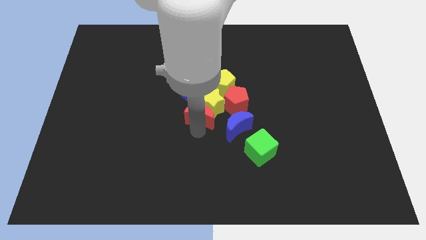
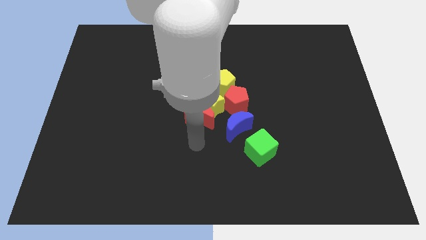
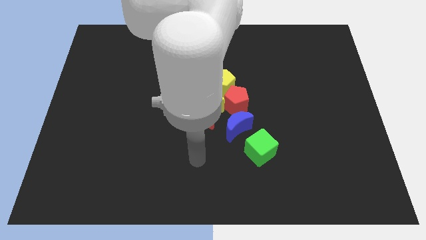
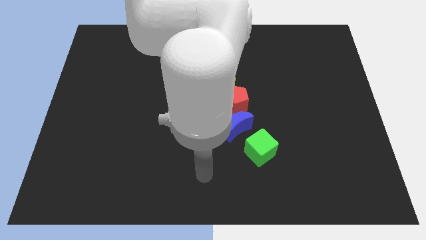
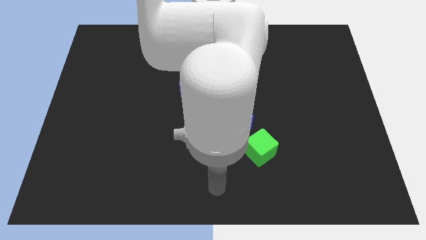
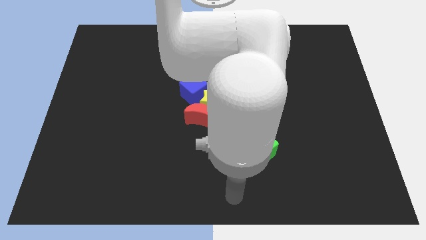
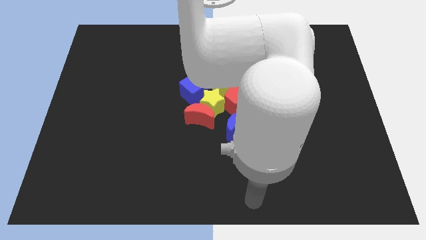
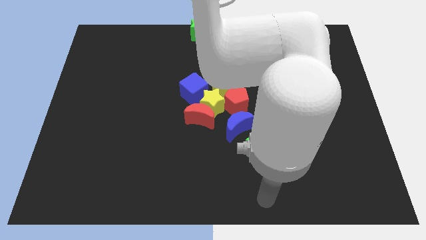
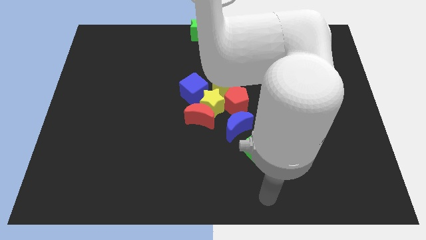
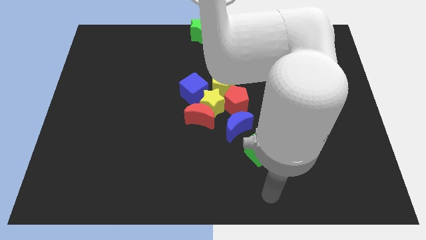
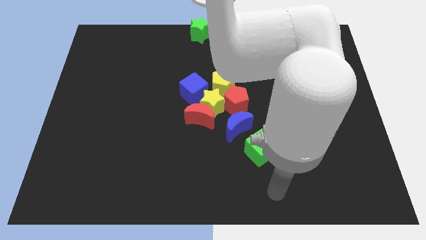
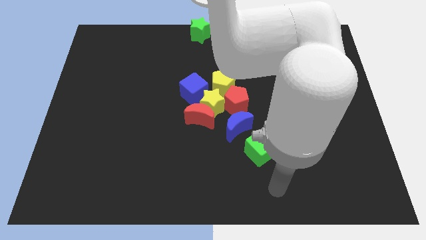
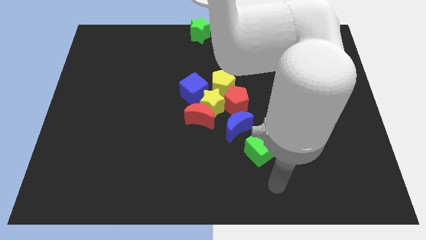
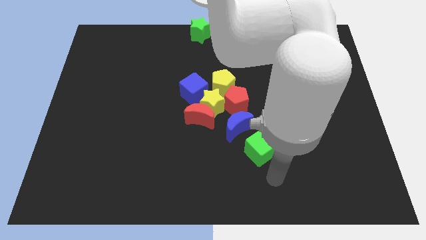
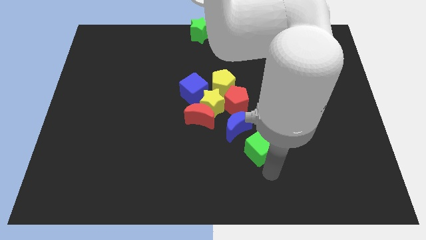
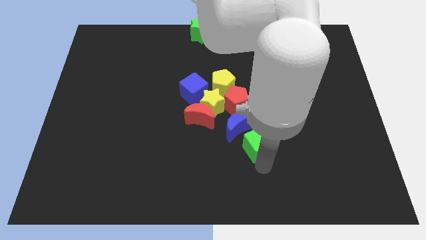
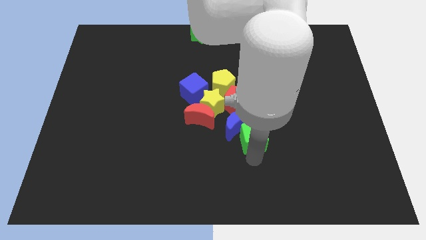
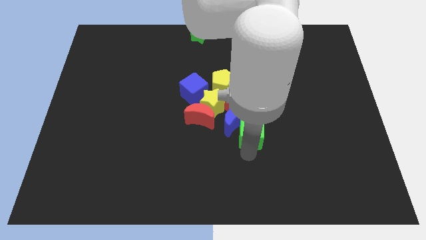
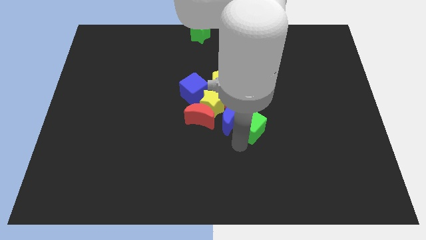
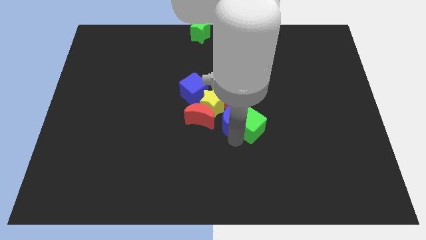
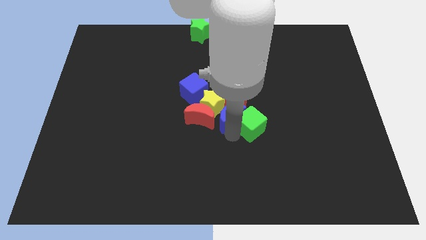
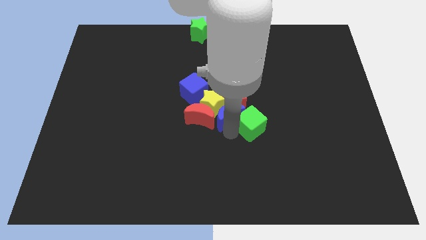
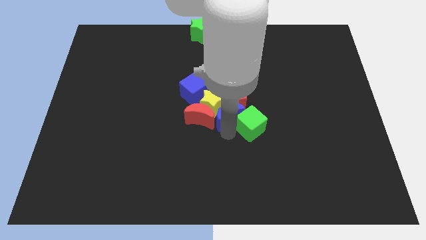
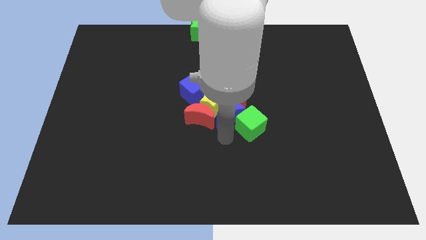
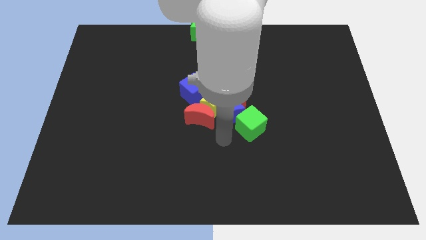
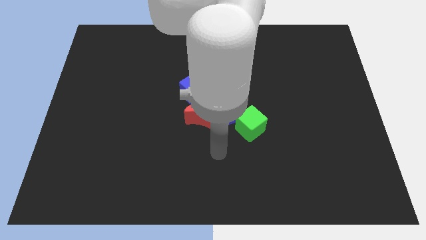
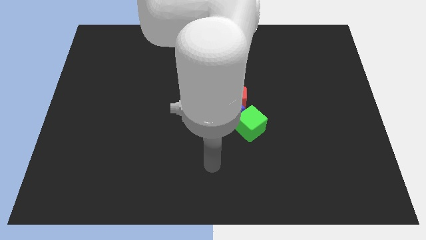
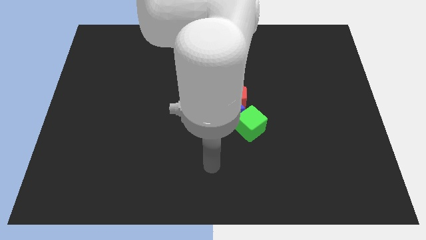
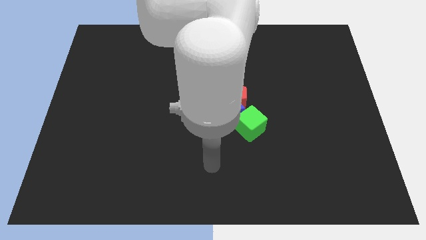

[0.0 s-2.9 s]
push the green cube into the group of blocks

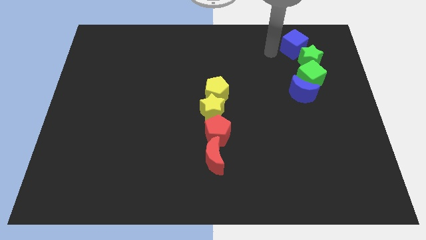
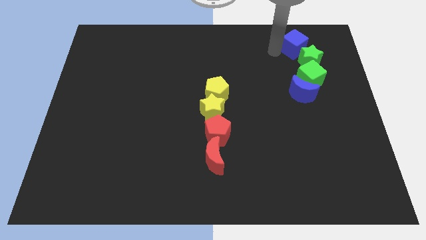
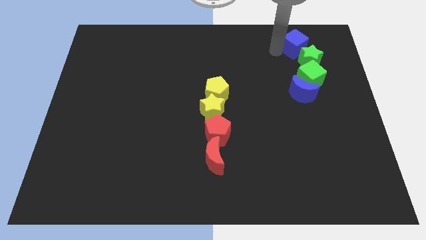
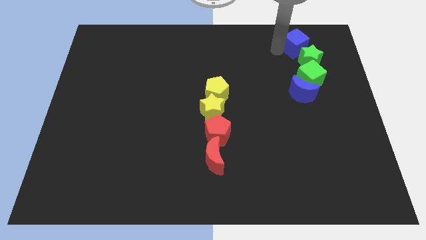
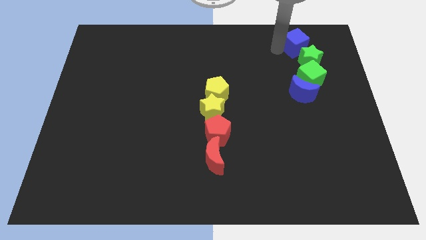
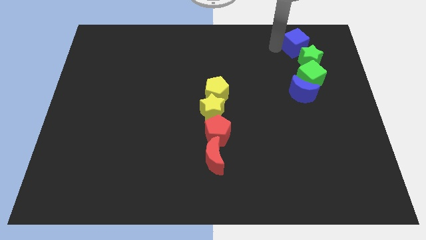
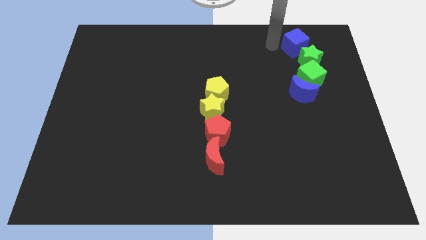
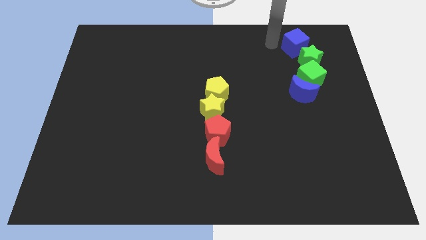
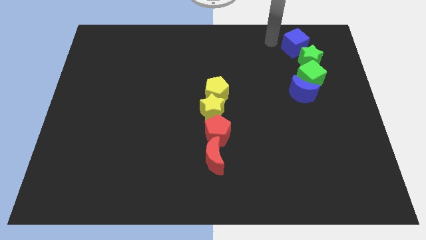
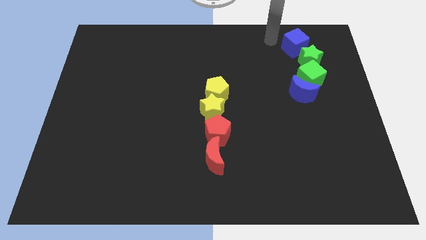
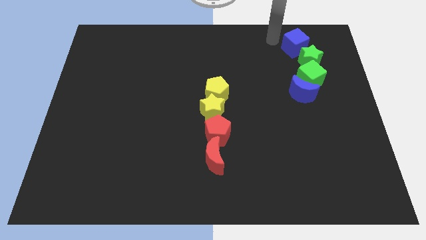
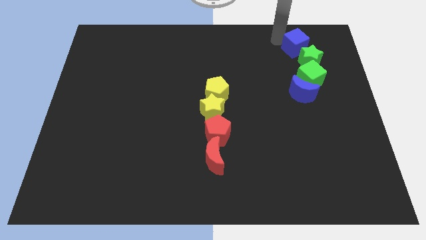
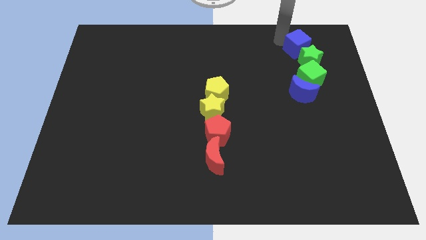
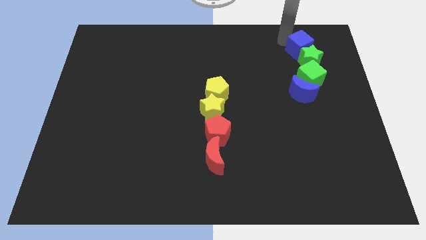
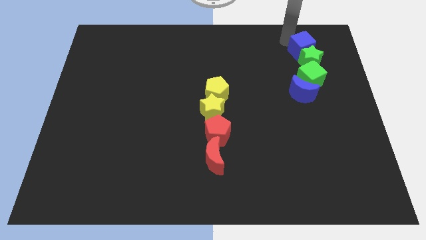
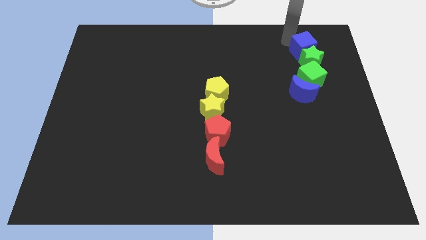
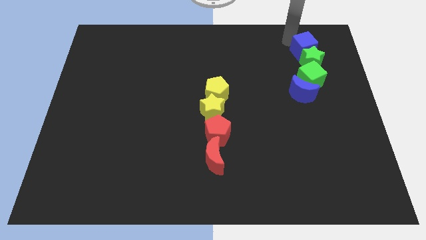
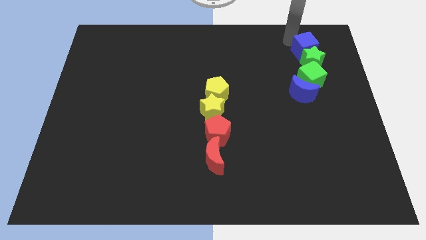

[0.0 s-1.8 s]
place the blue cube on the top of the green star

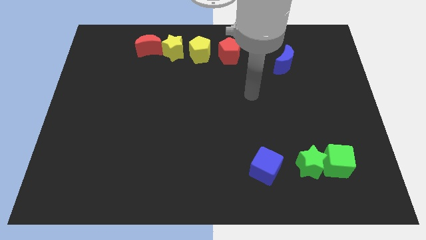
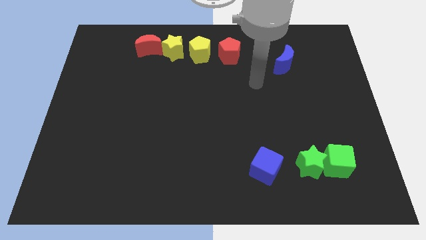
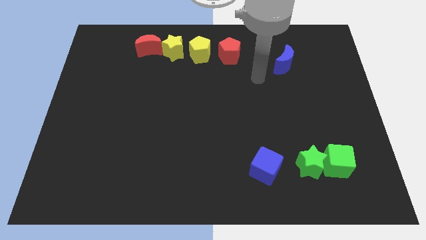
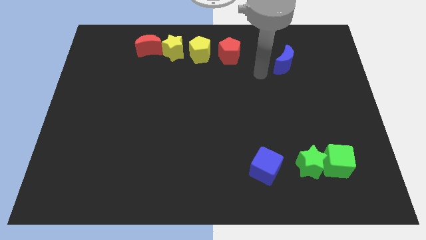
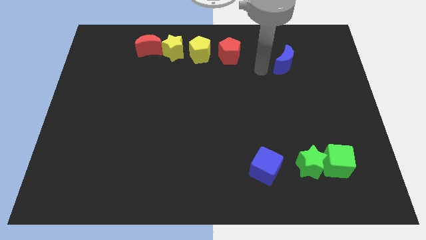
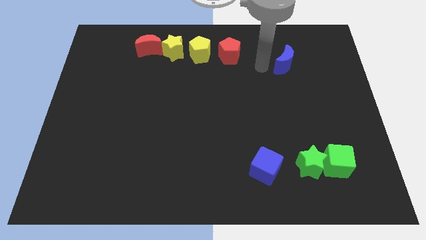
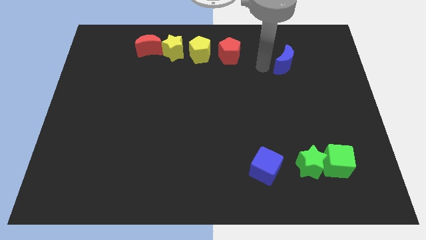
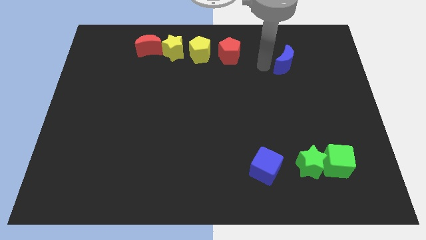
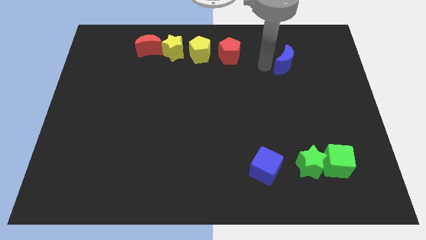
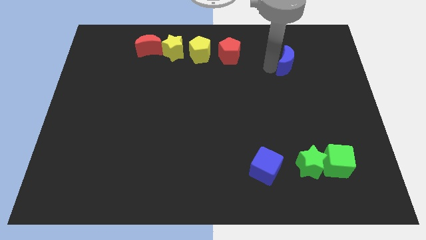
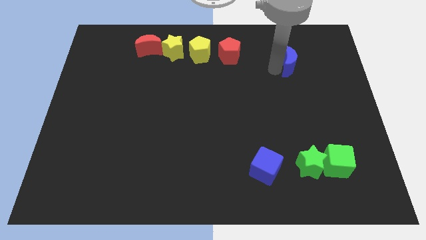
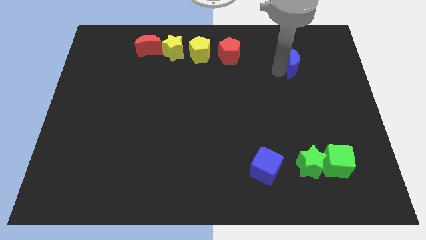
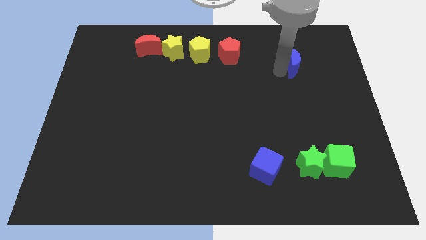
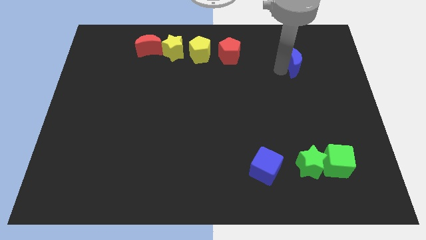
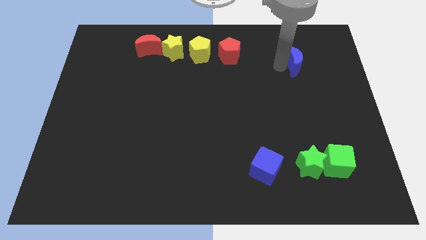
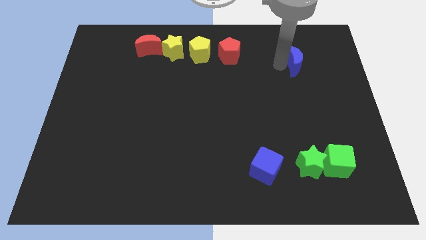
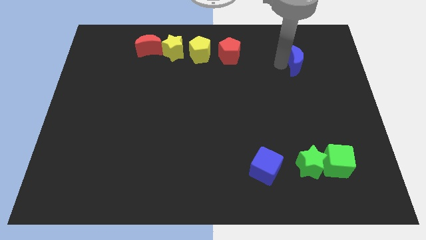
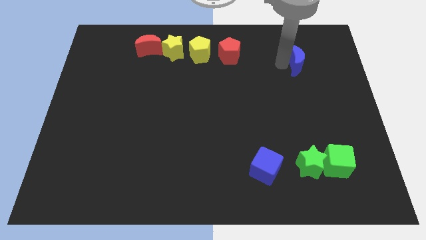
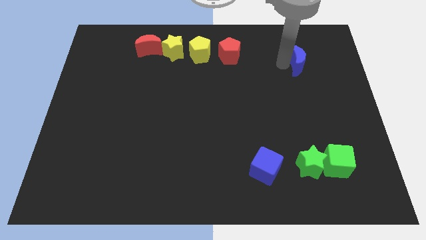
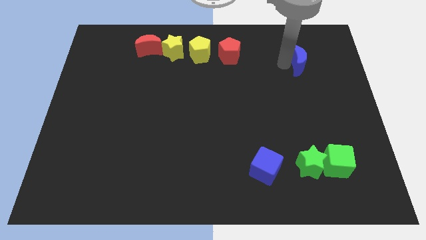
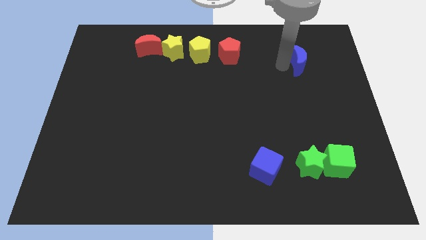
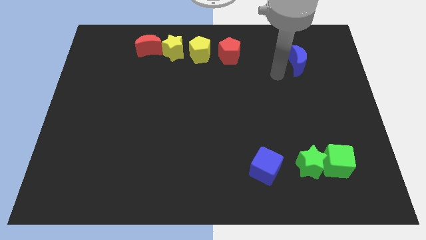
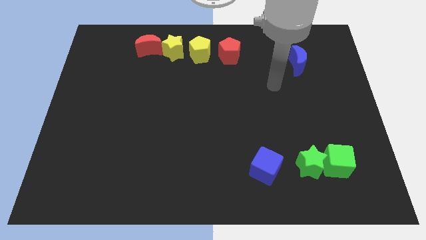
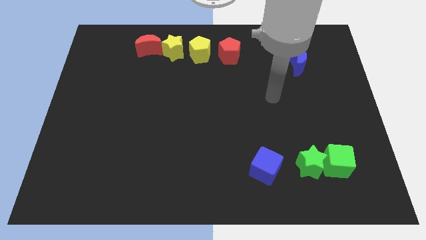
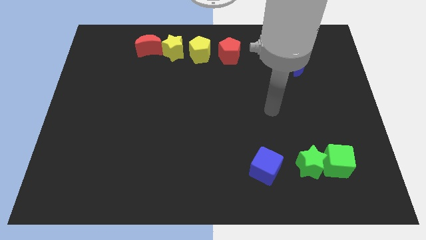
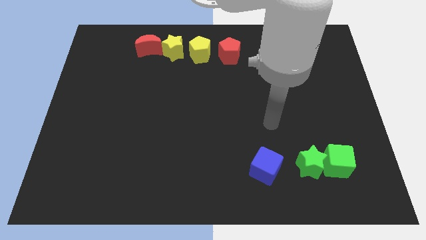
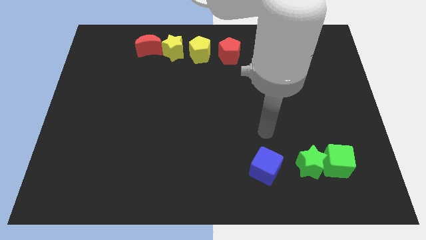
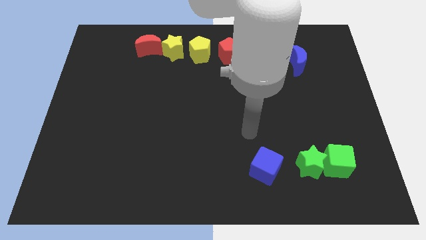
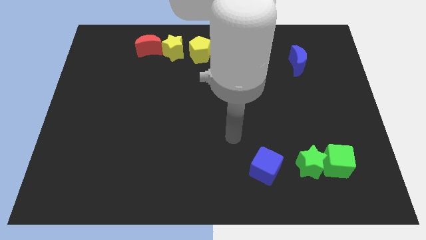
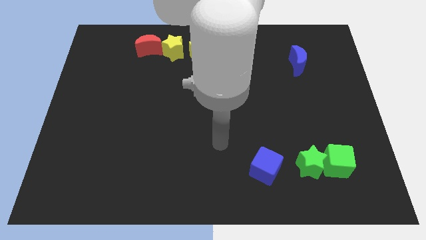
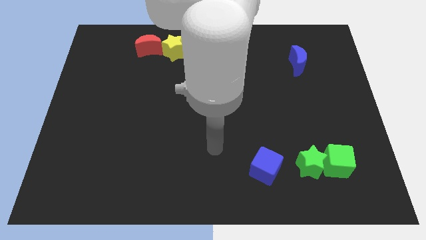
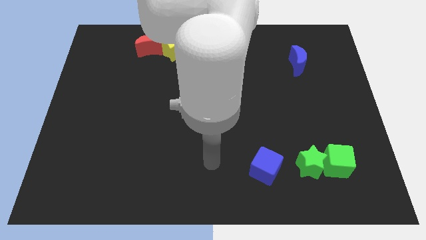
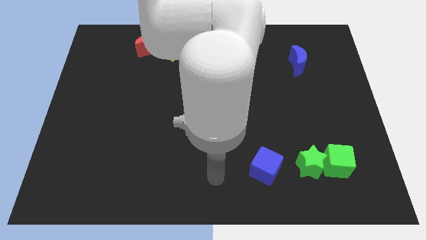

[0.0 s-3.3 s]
move the blue moon to the right

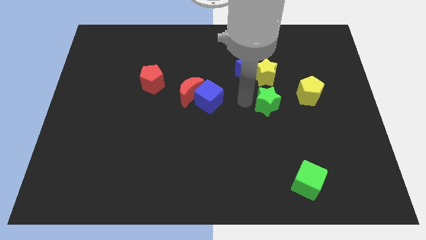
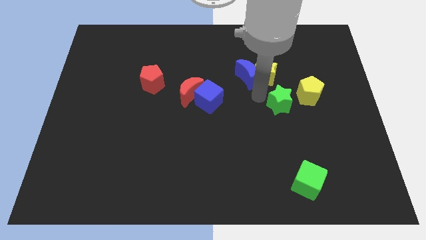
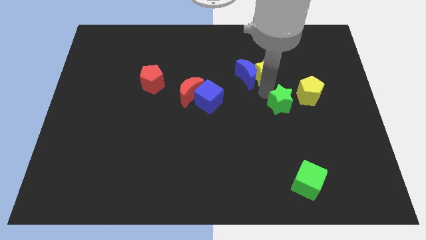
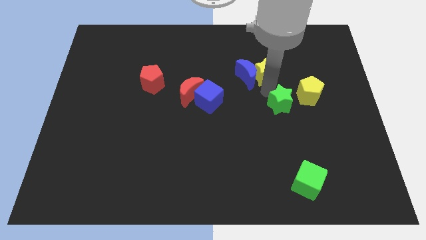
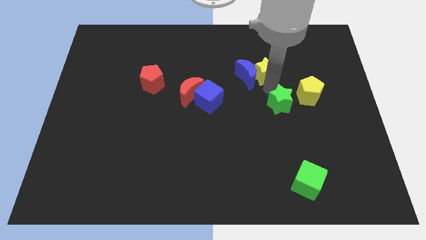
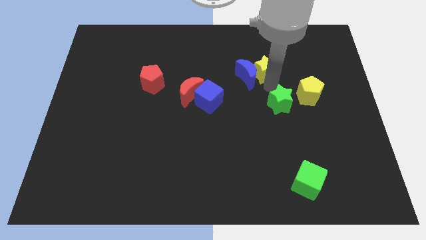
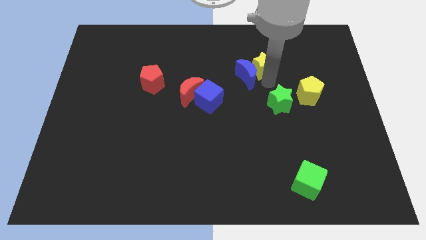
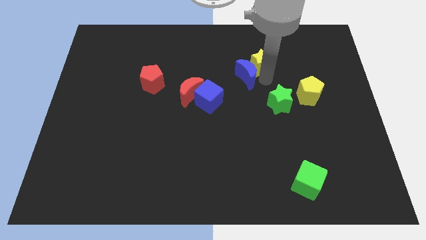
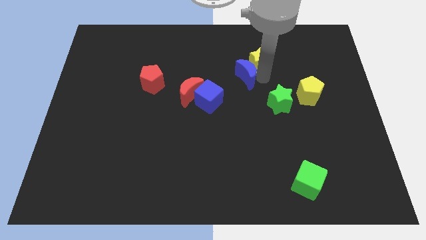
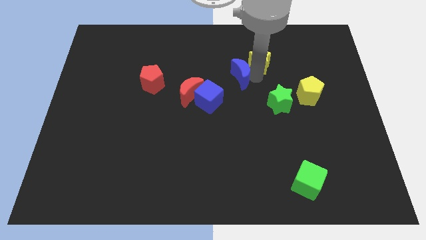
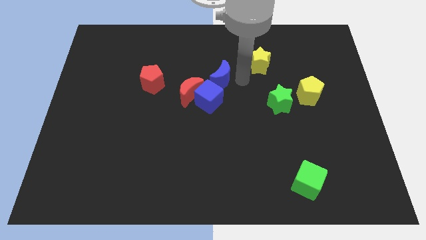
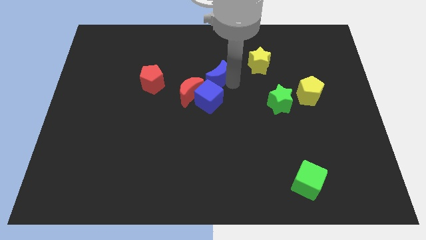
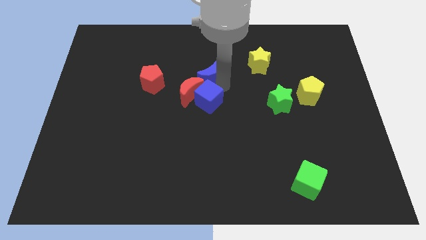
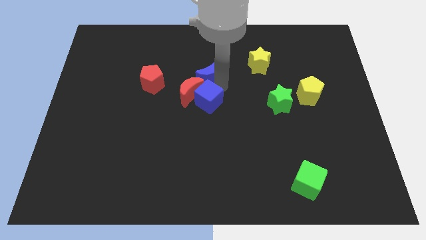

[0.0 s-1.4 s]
separate the blue moon from the yellow star
